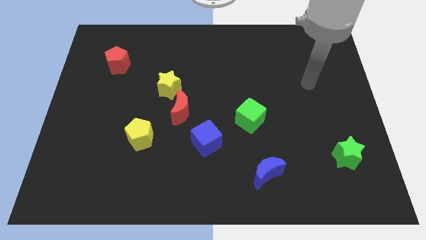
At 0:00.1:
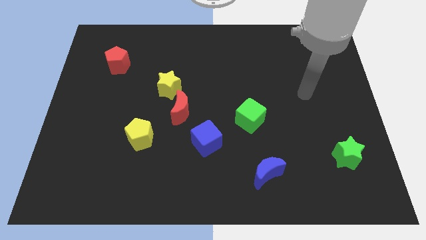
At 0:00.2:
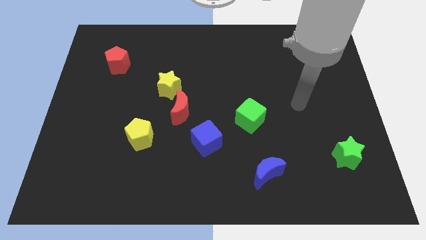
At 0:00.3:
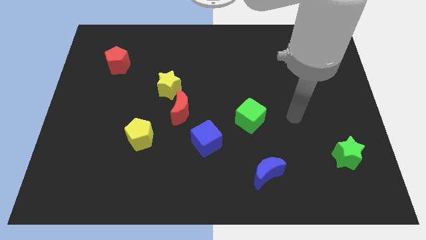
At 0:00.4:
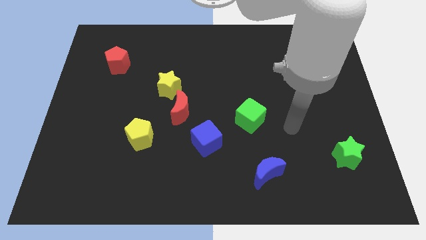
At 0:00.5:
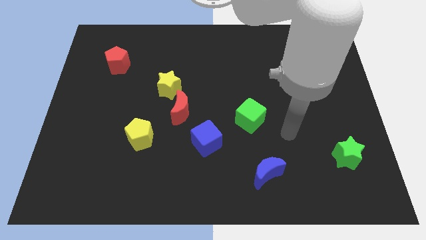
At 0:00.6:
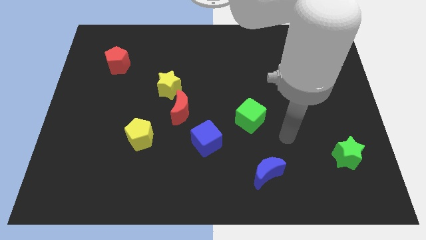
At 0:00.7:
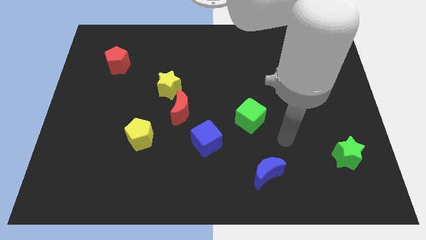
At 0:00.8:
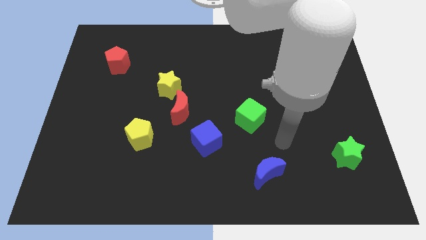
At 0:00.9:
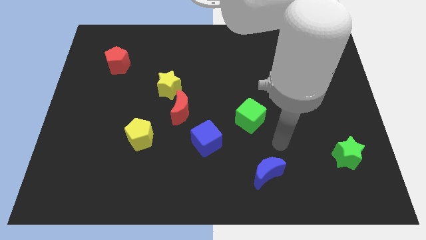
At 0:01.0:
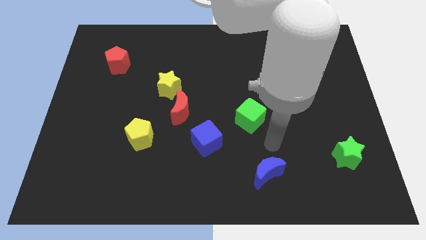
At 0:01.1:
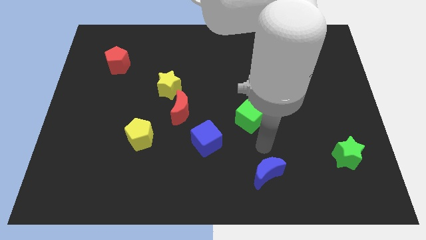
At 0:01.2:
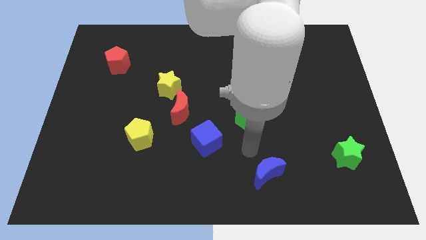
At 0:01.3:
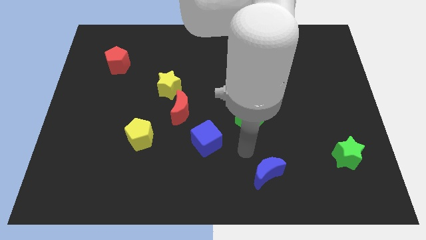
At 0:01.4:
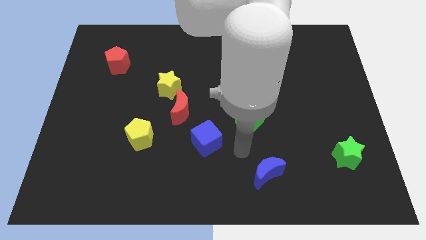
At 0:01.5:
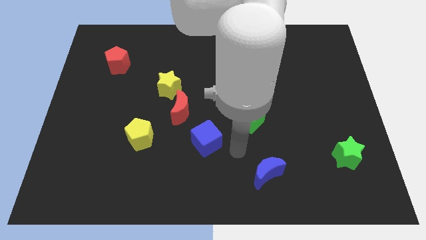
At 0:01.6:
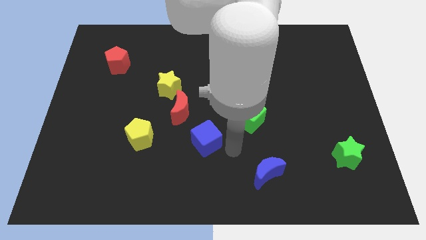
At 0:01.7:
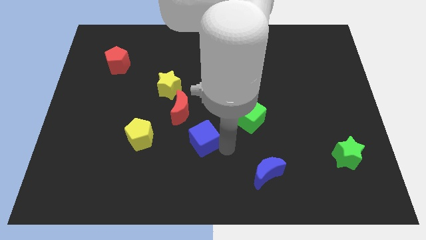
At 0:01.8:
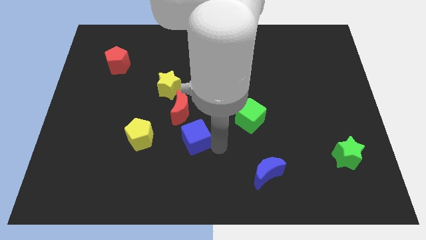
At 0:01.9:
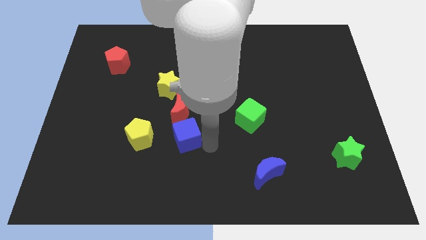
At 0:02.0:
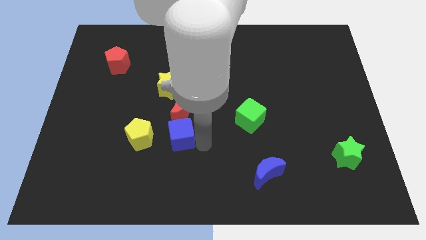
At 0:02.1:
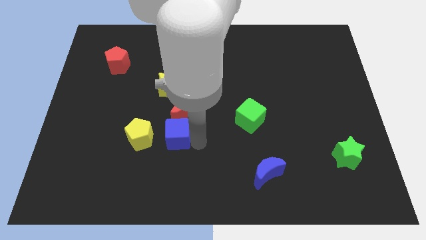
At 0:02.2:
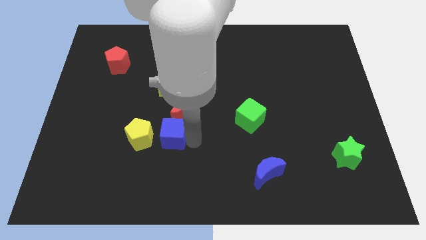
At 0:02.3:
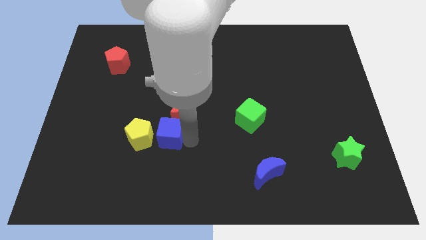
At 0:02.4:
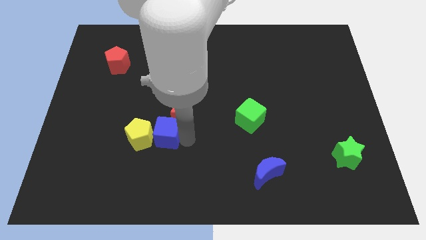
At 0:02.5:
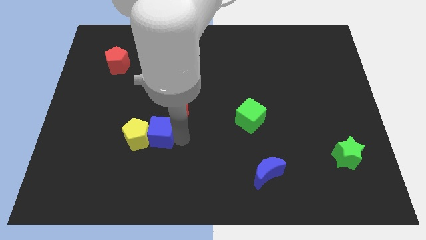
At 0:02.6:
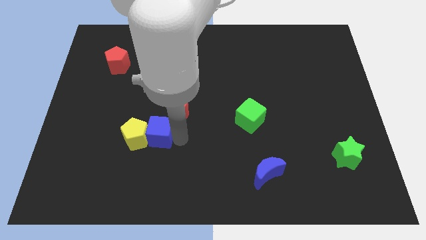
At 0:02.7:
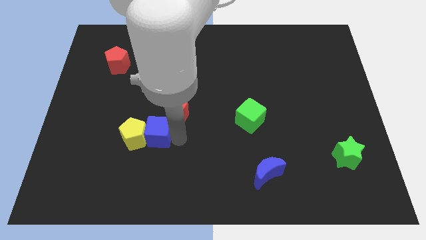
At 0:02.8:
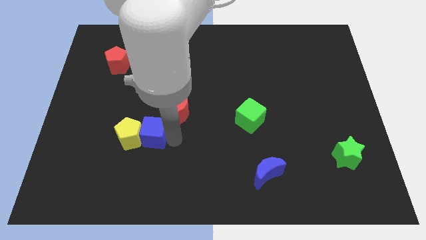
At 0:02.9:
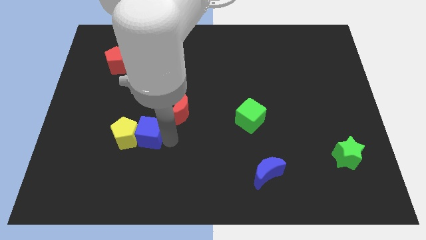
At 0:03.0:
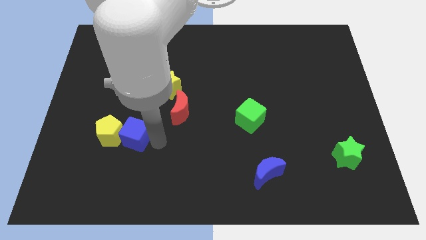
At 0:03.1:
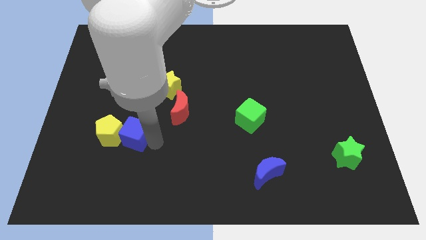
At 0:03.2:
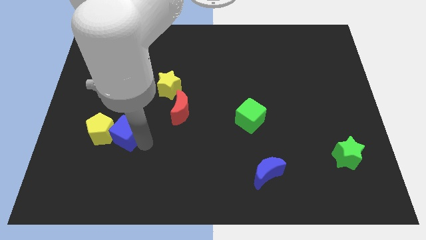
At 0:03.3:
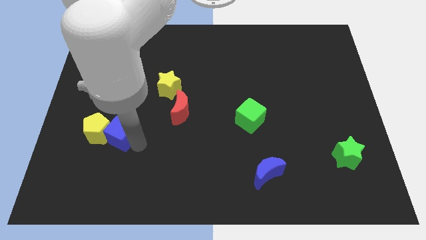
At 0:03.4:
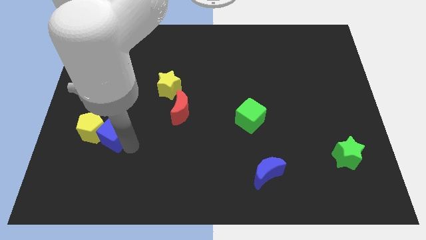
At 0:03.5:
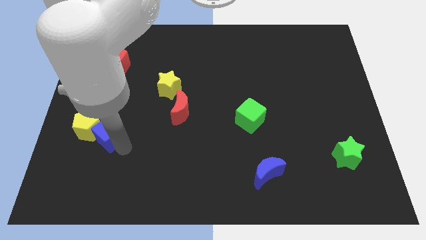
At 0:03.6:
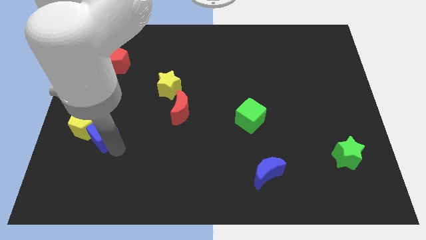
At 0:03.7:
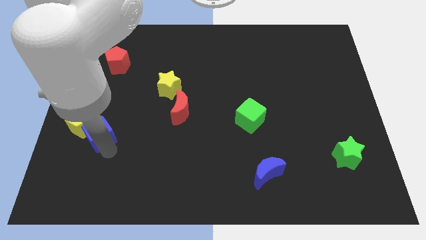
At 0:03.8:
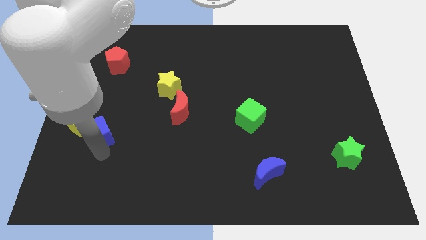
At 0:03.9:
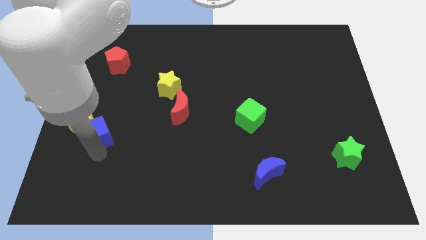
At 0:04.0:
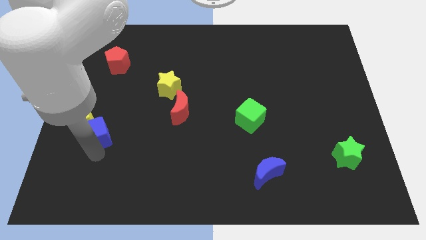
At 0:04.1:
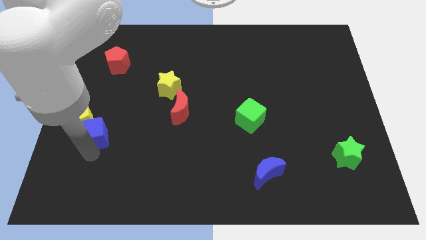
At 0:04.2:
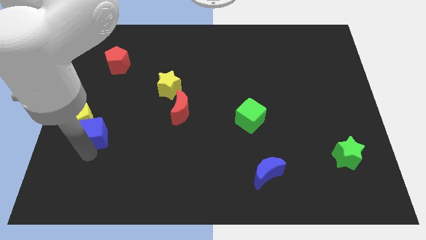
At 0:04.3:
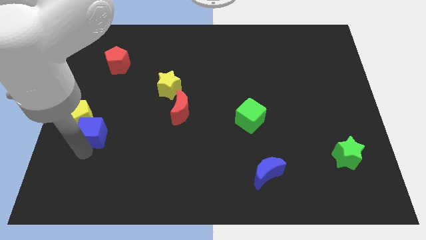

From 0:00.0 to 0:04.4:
move blue cube into yellow pentagon

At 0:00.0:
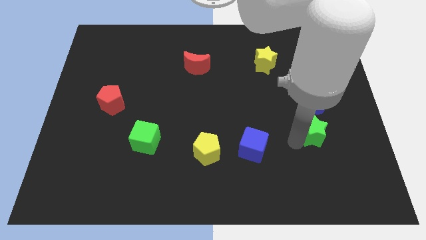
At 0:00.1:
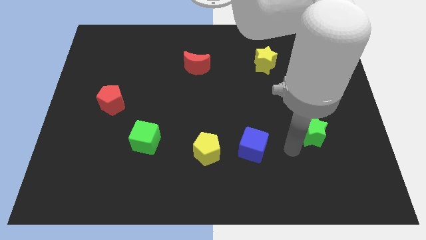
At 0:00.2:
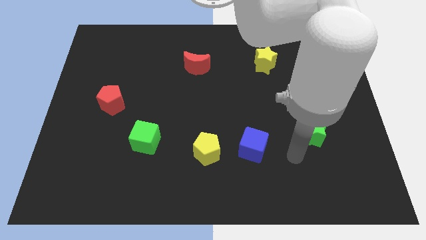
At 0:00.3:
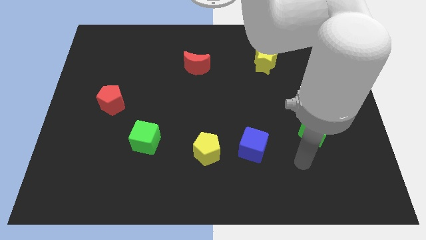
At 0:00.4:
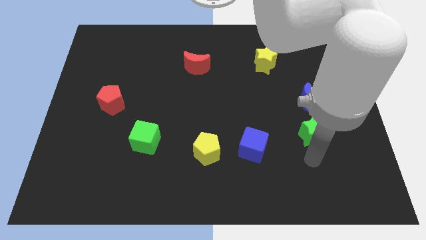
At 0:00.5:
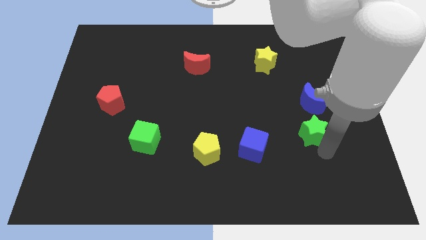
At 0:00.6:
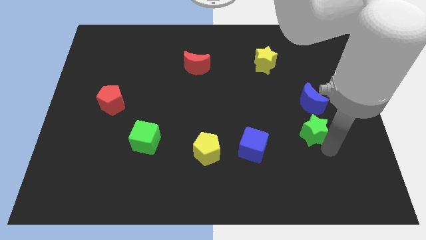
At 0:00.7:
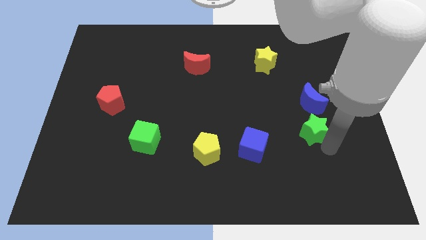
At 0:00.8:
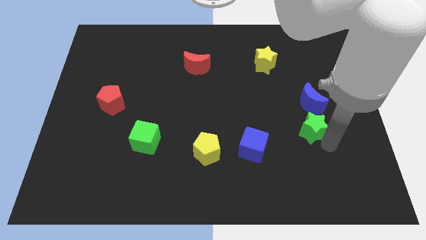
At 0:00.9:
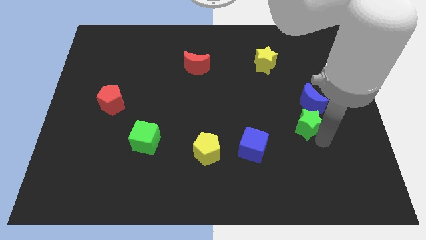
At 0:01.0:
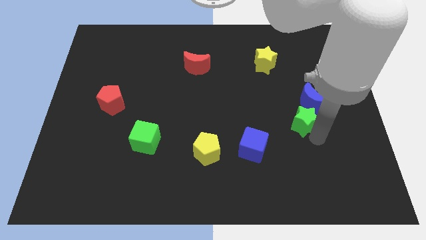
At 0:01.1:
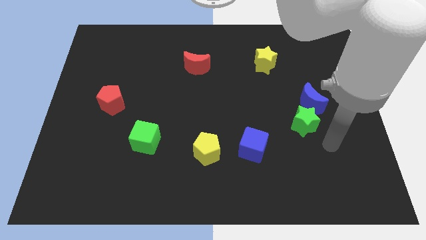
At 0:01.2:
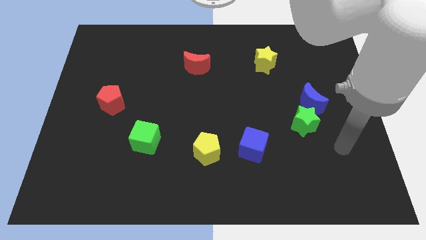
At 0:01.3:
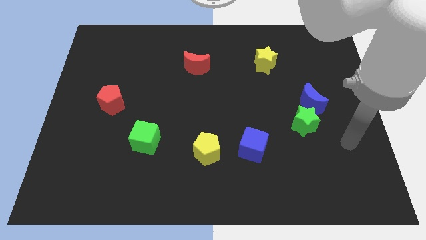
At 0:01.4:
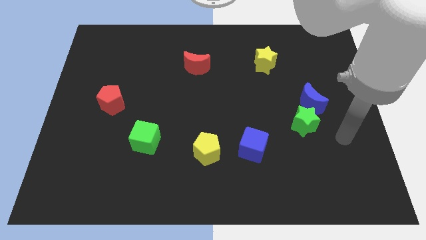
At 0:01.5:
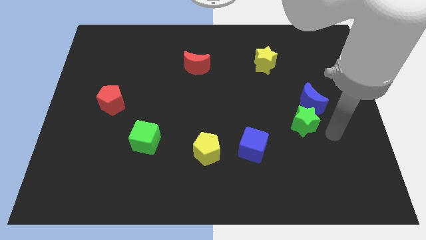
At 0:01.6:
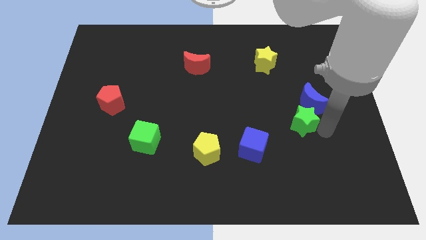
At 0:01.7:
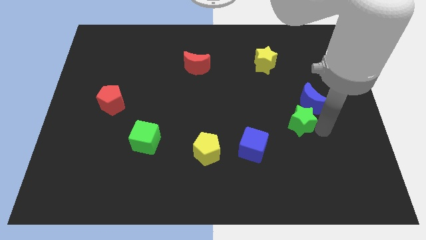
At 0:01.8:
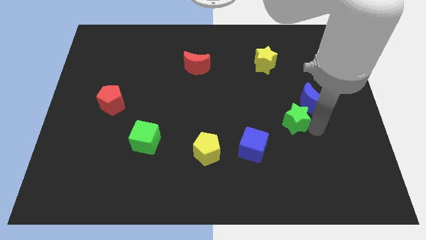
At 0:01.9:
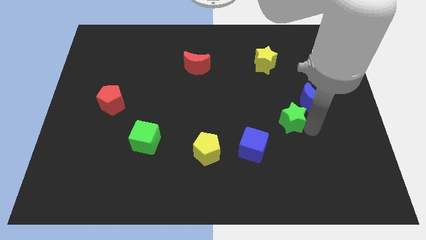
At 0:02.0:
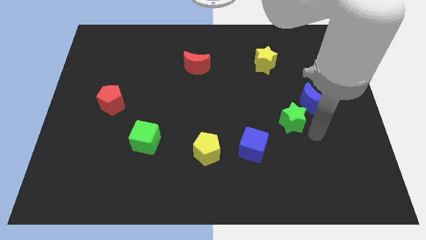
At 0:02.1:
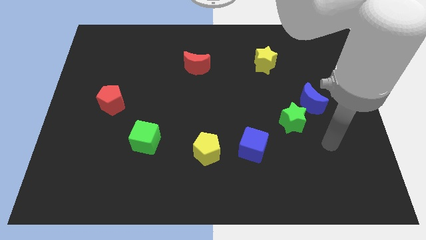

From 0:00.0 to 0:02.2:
move the green star in between blue cube and blue crescent

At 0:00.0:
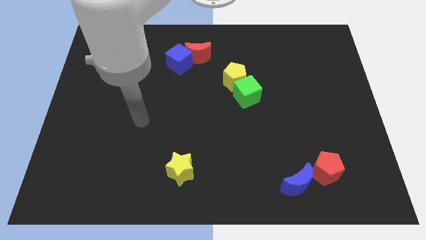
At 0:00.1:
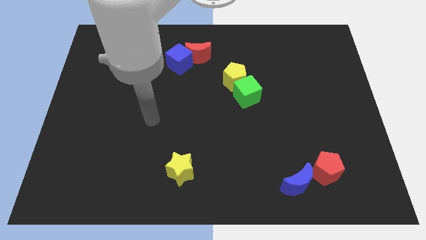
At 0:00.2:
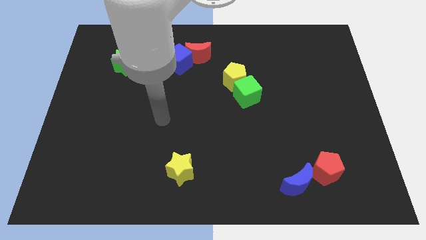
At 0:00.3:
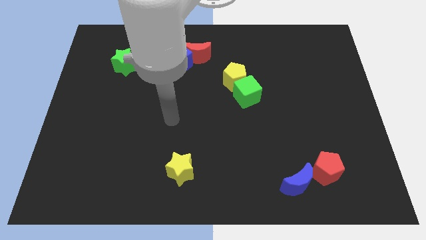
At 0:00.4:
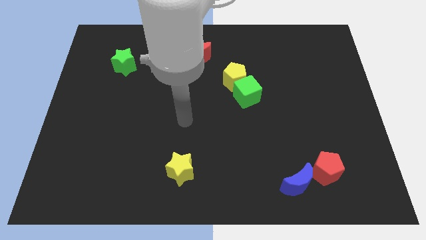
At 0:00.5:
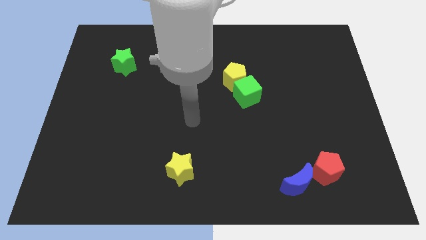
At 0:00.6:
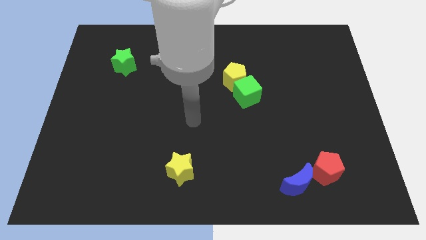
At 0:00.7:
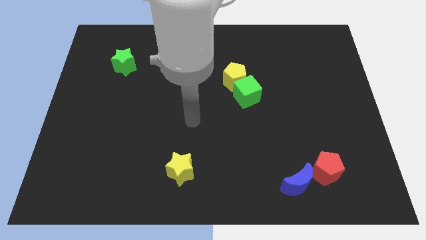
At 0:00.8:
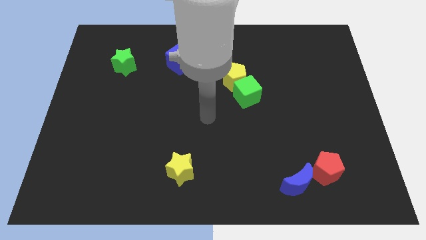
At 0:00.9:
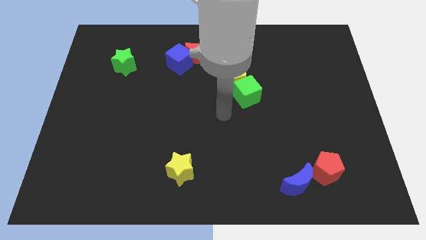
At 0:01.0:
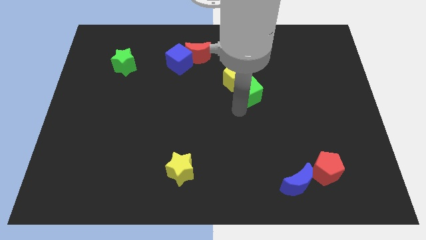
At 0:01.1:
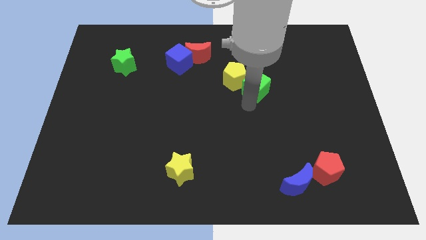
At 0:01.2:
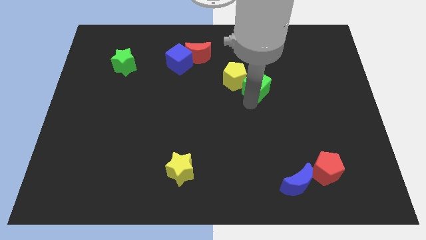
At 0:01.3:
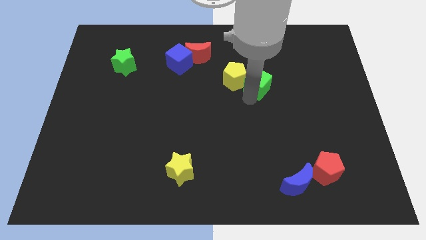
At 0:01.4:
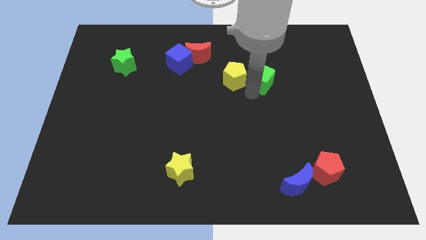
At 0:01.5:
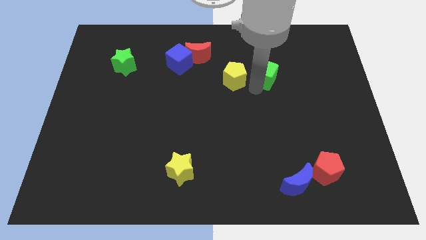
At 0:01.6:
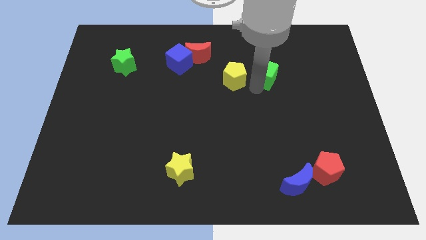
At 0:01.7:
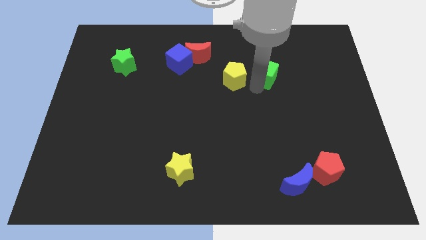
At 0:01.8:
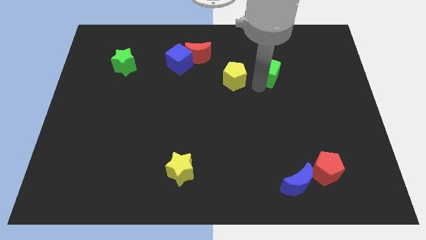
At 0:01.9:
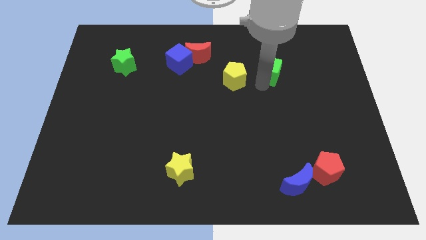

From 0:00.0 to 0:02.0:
move the green cube towards top

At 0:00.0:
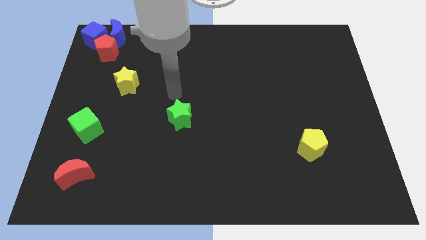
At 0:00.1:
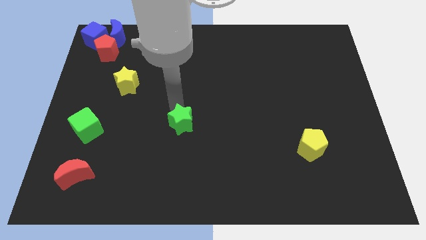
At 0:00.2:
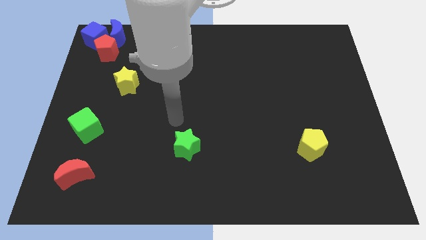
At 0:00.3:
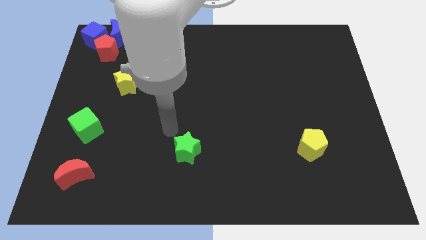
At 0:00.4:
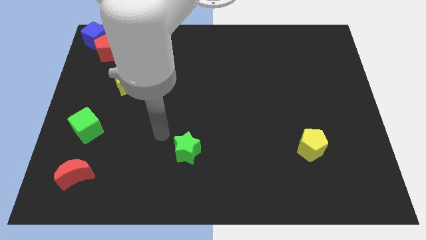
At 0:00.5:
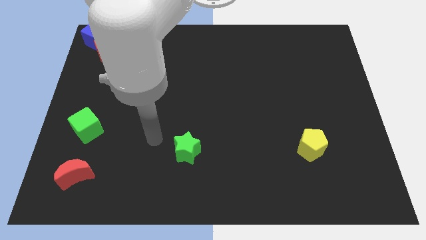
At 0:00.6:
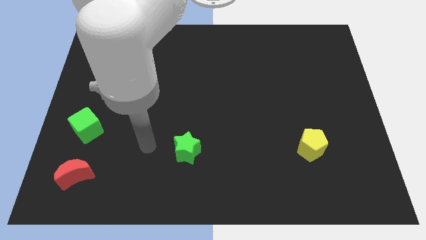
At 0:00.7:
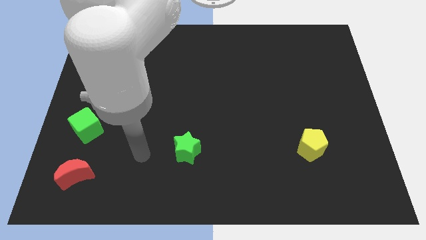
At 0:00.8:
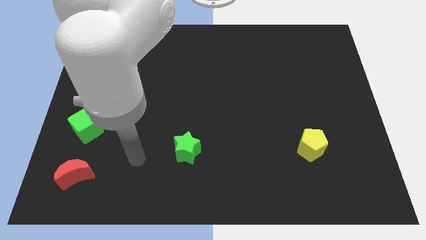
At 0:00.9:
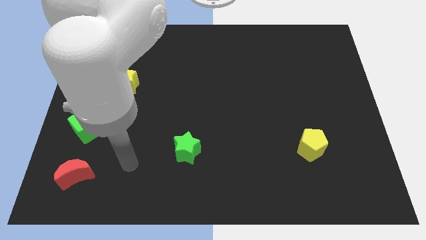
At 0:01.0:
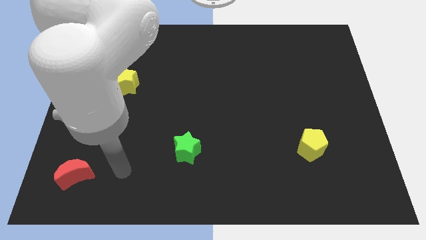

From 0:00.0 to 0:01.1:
move the green star to the bottom of the board
